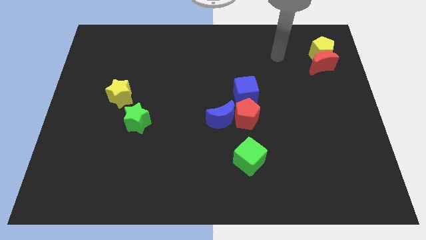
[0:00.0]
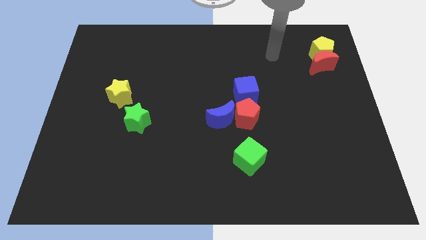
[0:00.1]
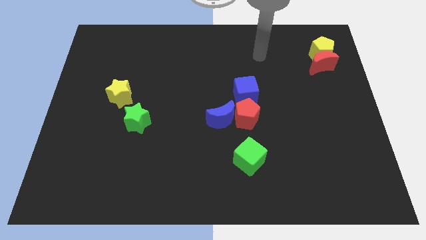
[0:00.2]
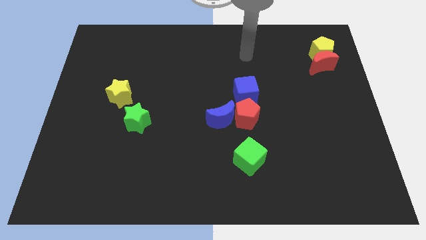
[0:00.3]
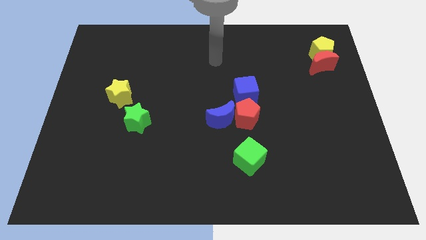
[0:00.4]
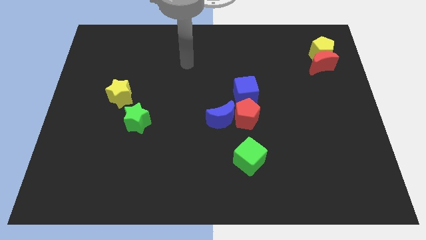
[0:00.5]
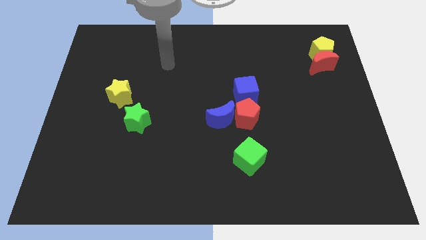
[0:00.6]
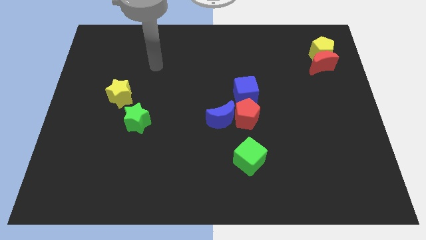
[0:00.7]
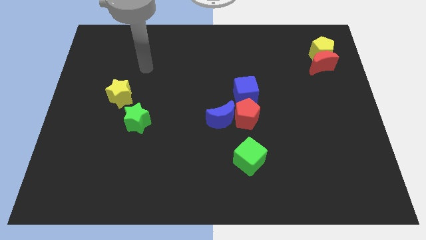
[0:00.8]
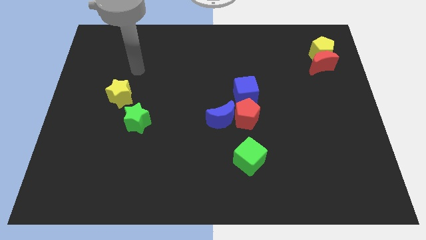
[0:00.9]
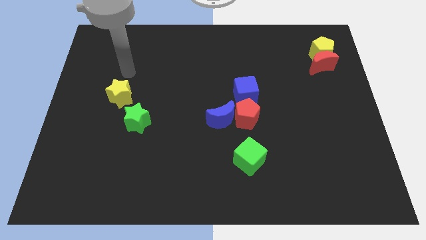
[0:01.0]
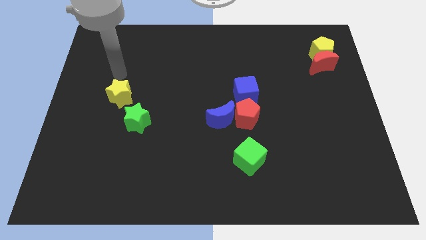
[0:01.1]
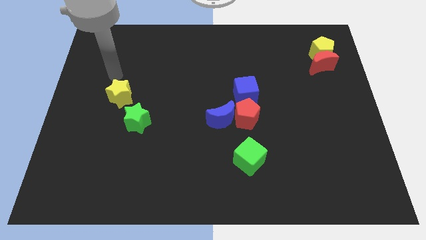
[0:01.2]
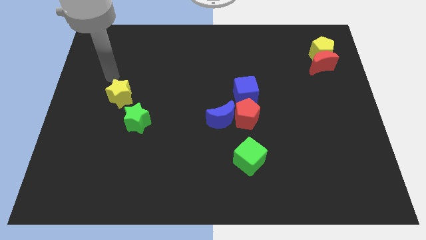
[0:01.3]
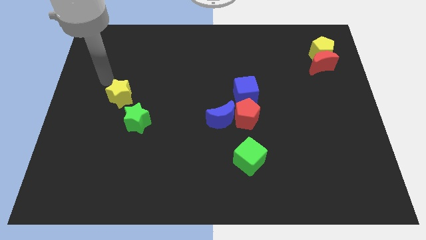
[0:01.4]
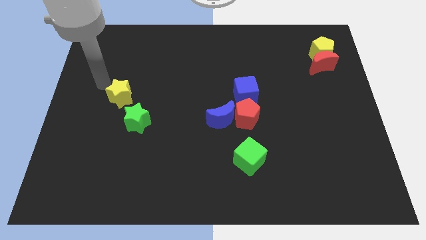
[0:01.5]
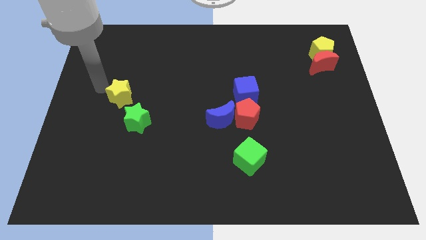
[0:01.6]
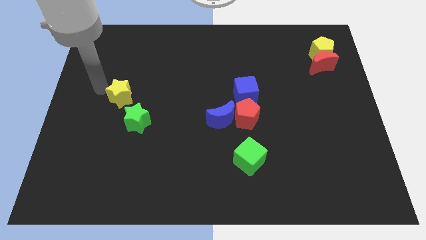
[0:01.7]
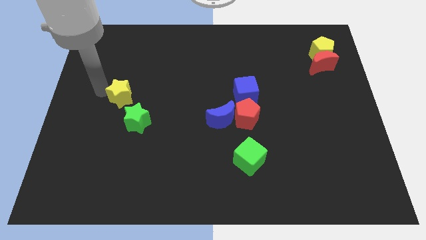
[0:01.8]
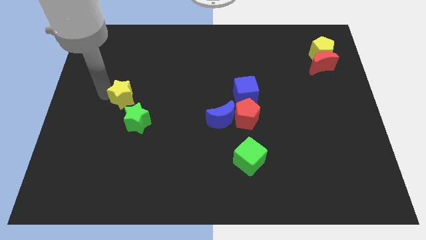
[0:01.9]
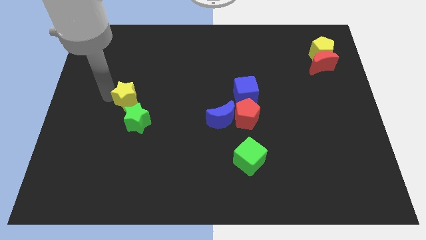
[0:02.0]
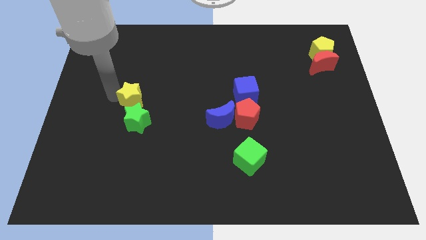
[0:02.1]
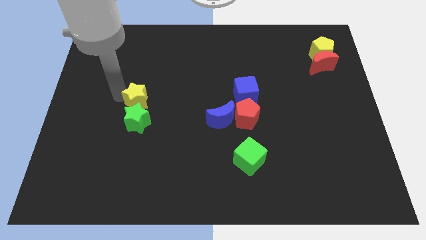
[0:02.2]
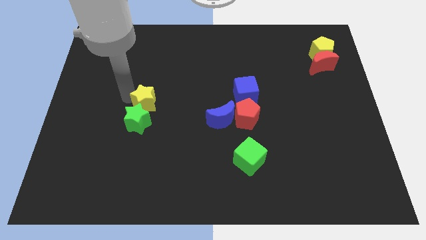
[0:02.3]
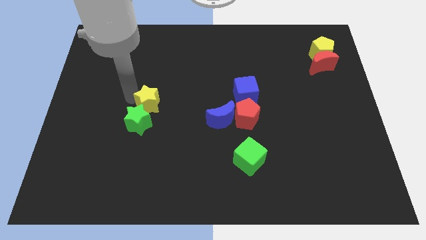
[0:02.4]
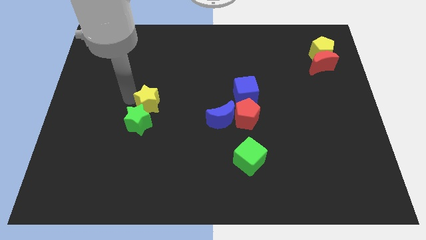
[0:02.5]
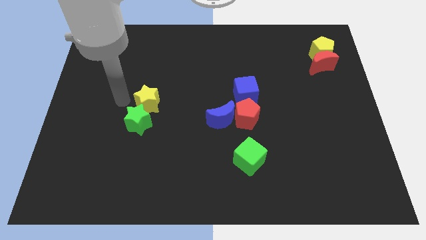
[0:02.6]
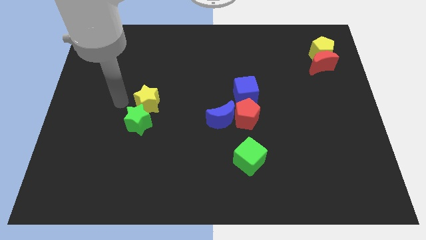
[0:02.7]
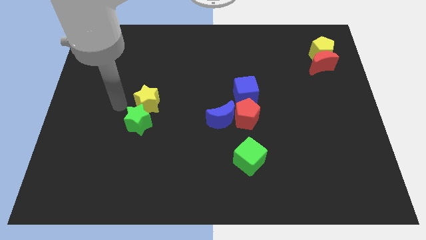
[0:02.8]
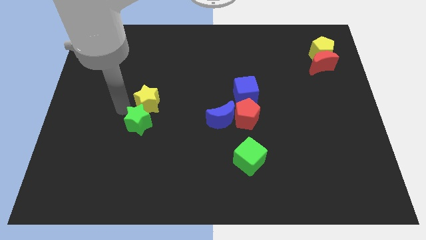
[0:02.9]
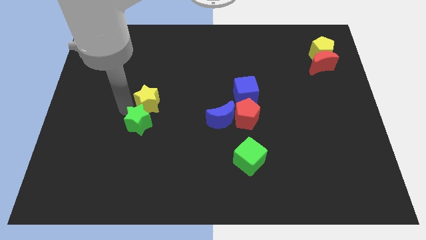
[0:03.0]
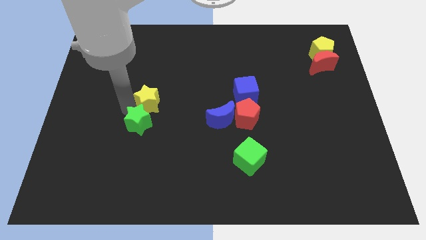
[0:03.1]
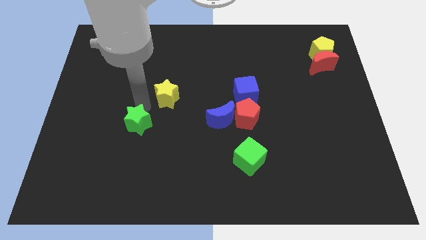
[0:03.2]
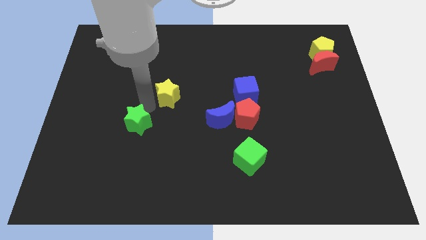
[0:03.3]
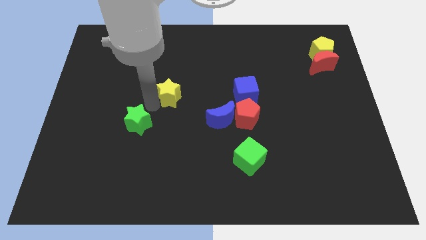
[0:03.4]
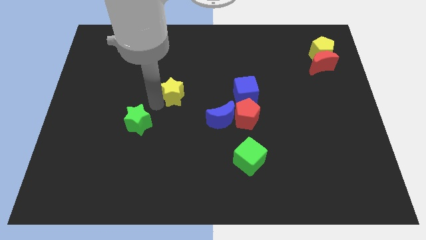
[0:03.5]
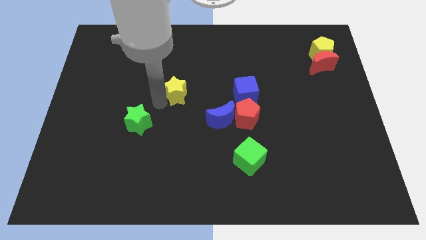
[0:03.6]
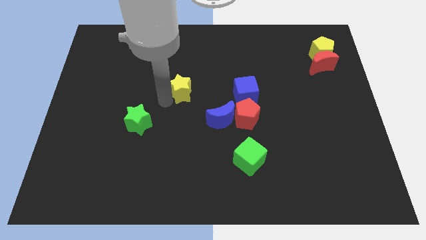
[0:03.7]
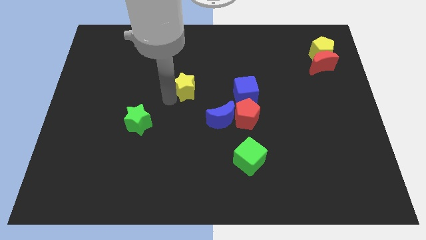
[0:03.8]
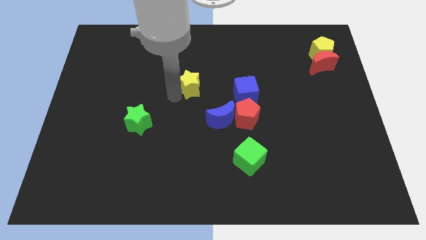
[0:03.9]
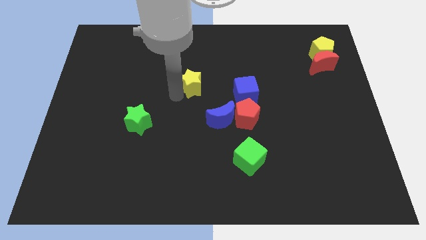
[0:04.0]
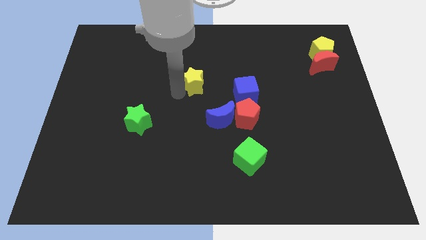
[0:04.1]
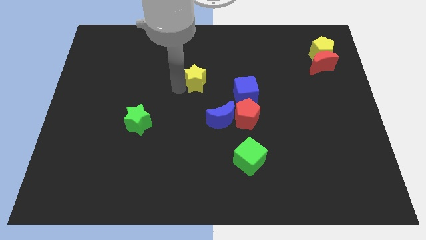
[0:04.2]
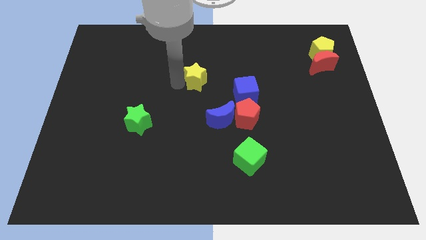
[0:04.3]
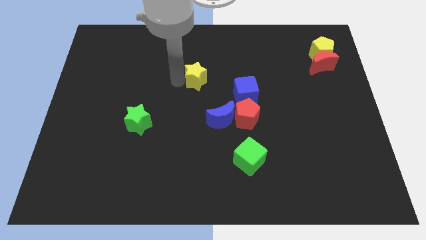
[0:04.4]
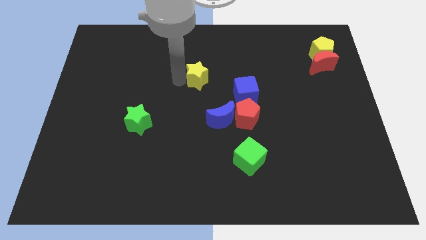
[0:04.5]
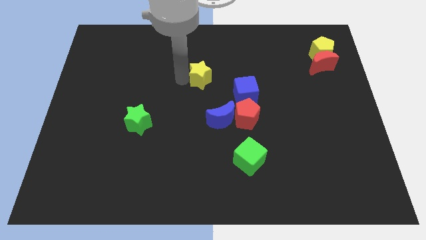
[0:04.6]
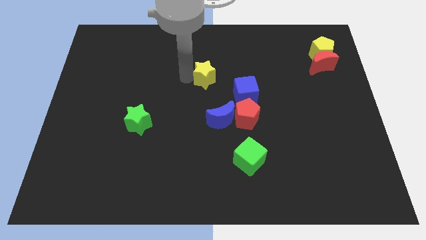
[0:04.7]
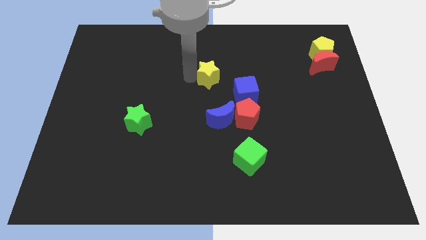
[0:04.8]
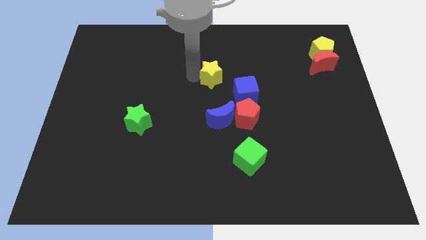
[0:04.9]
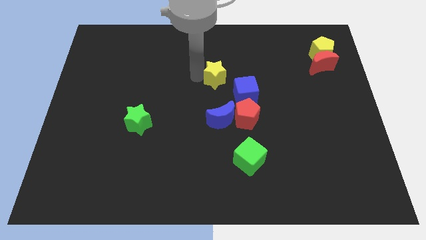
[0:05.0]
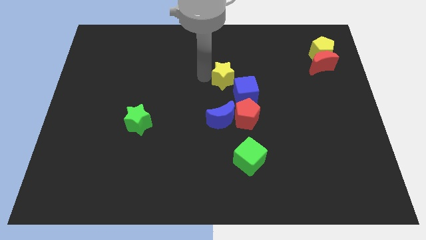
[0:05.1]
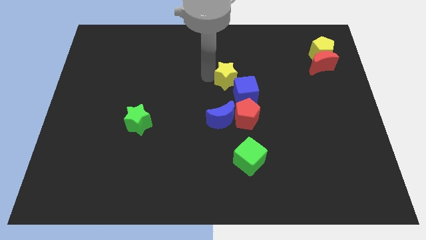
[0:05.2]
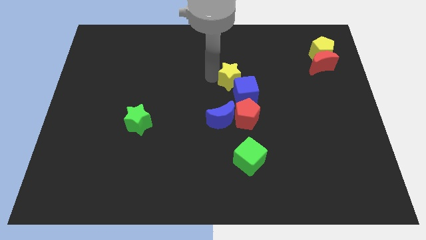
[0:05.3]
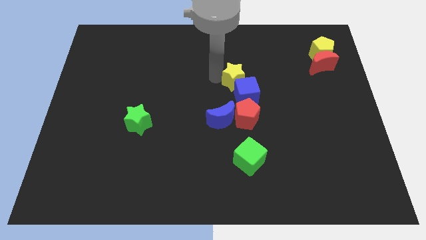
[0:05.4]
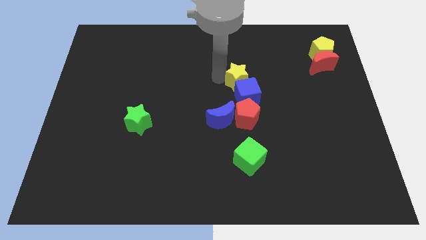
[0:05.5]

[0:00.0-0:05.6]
push the yellow star close to the blue cube

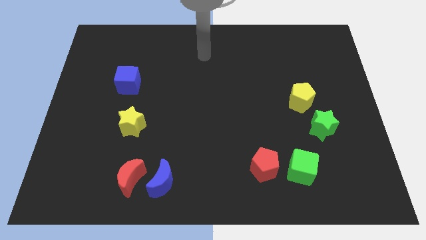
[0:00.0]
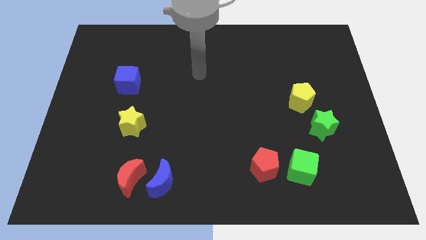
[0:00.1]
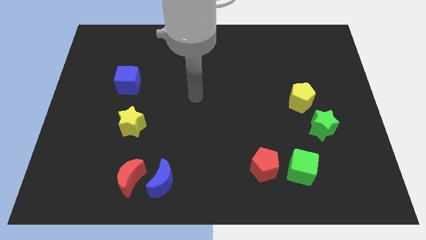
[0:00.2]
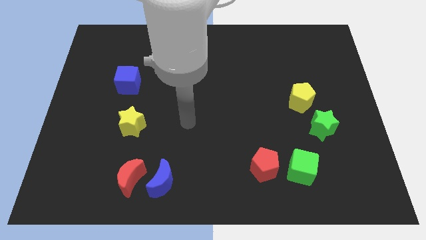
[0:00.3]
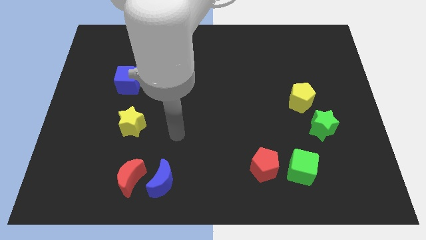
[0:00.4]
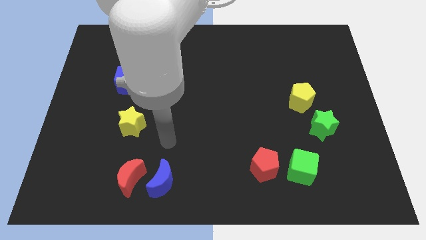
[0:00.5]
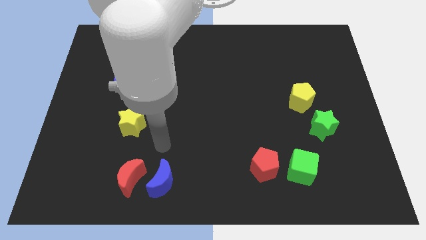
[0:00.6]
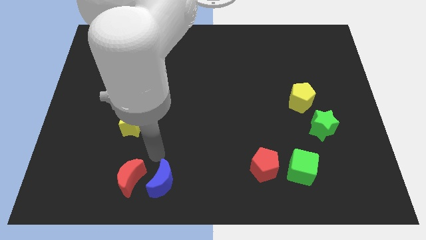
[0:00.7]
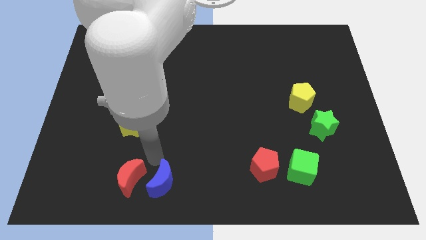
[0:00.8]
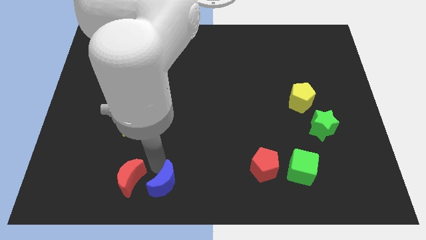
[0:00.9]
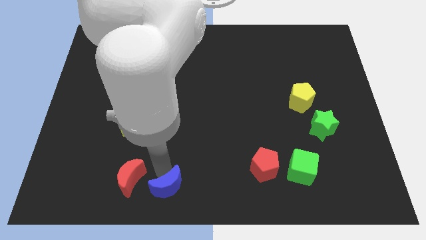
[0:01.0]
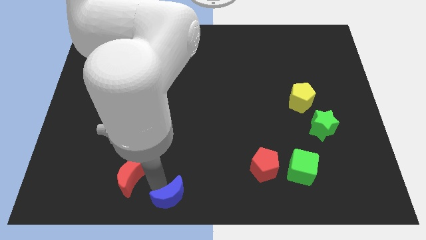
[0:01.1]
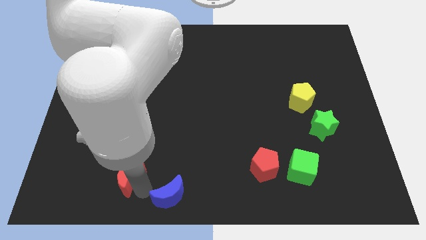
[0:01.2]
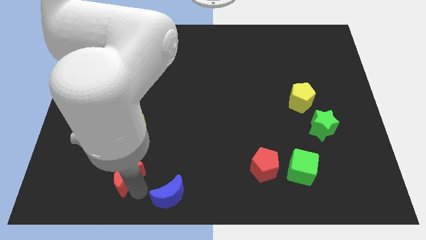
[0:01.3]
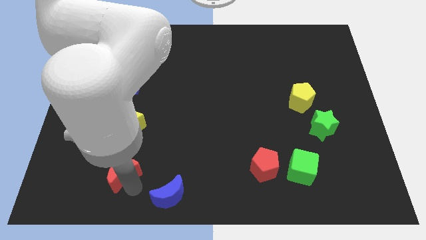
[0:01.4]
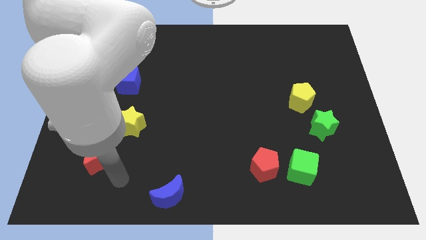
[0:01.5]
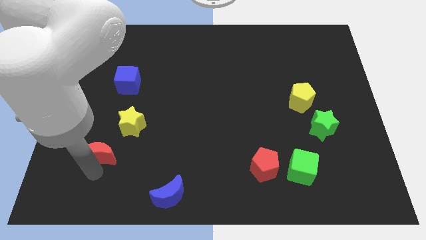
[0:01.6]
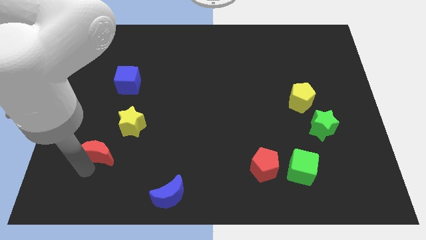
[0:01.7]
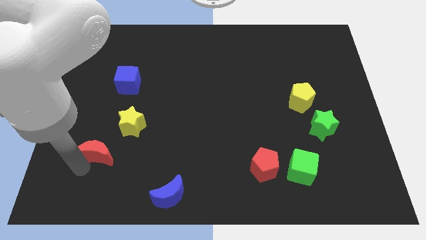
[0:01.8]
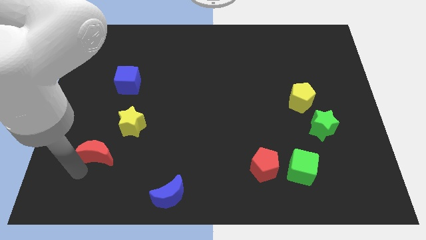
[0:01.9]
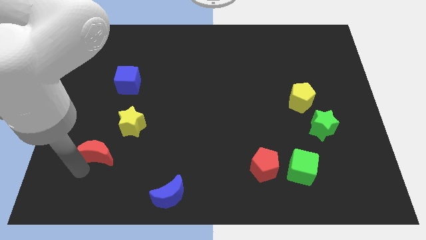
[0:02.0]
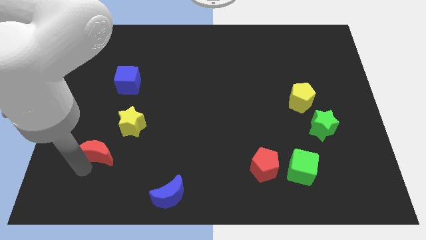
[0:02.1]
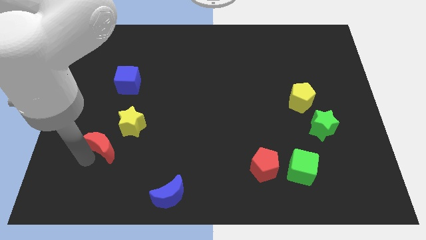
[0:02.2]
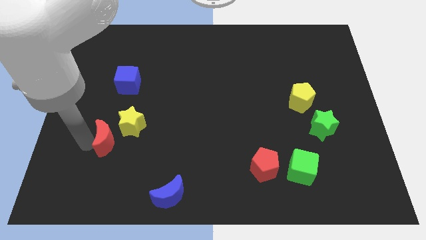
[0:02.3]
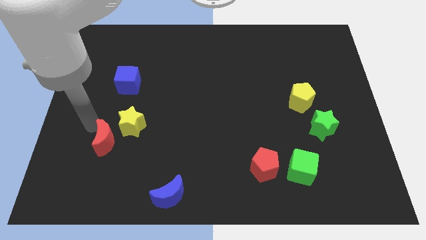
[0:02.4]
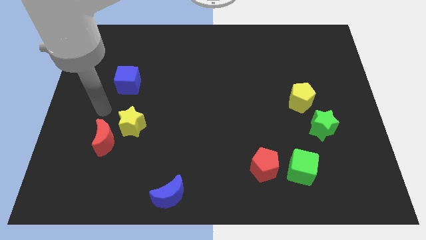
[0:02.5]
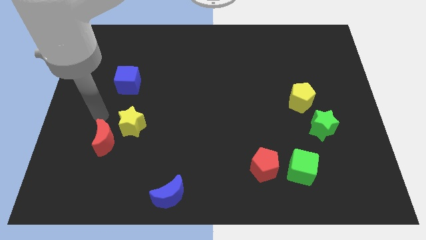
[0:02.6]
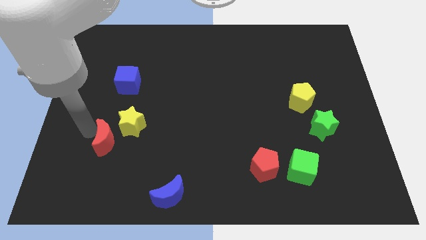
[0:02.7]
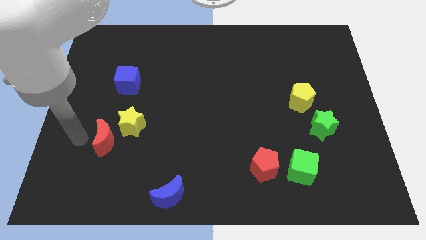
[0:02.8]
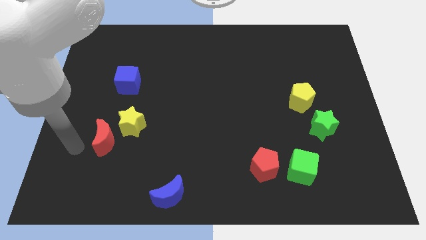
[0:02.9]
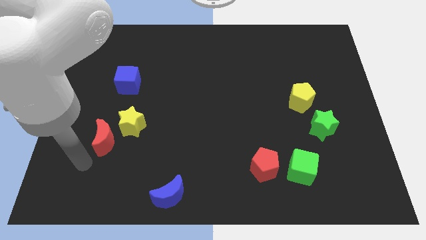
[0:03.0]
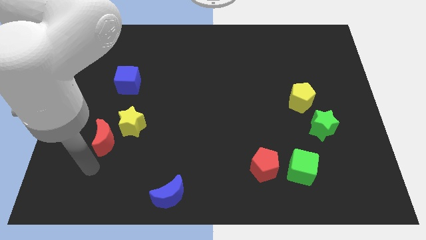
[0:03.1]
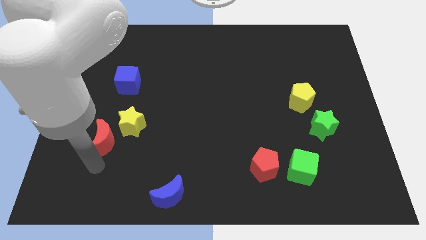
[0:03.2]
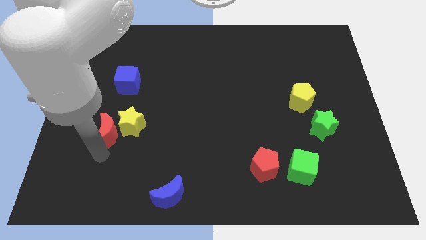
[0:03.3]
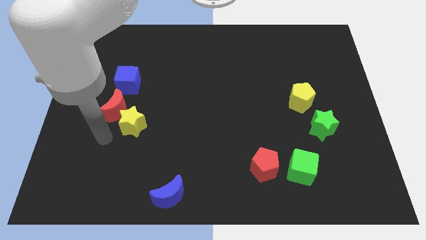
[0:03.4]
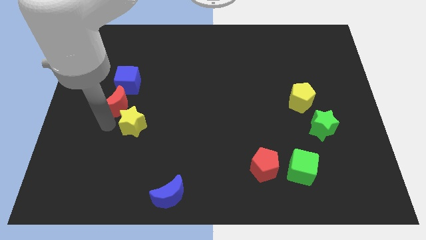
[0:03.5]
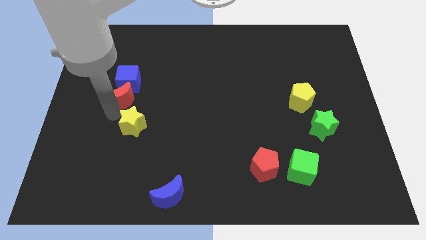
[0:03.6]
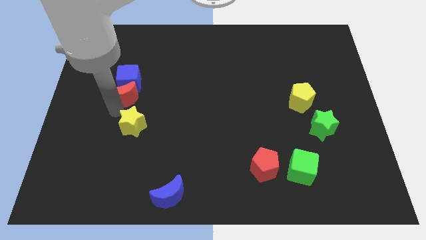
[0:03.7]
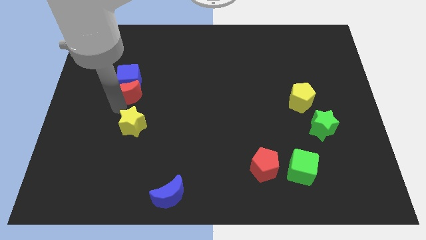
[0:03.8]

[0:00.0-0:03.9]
put the red moon towards the blue cube
